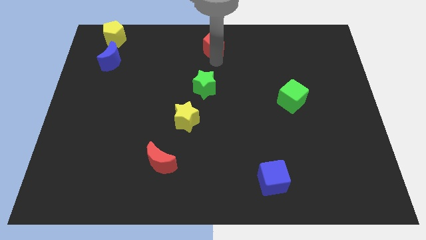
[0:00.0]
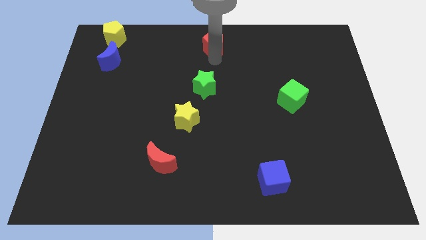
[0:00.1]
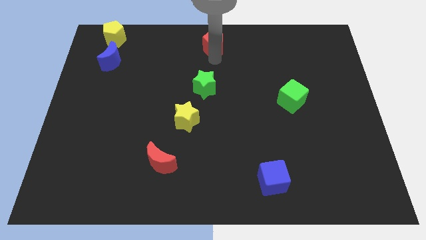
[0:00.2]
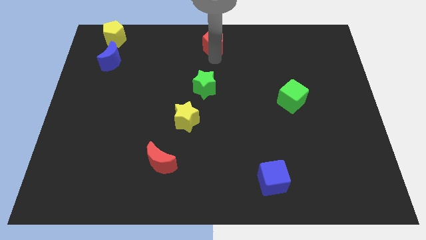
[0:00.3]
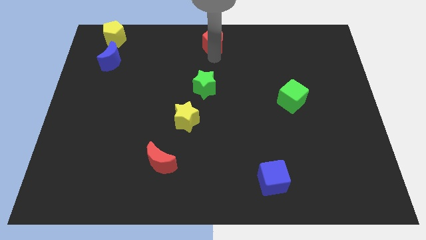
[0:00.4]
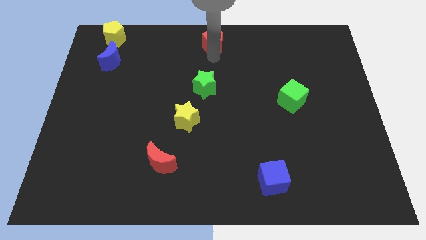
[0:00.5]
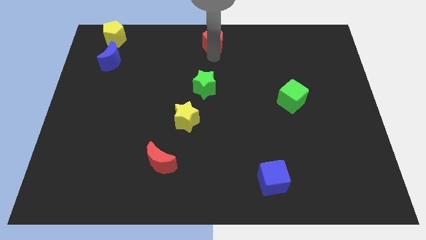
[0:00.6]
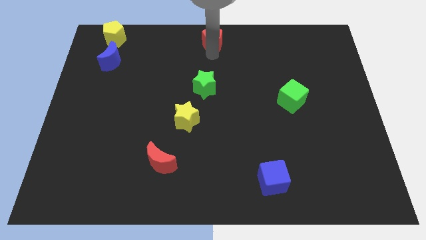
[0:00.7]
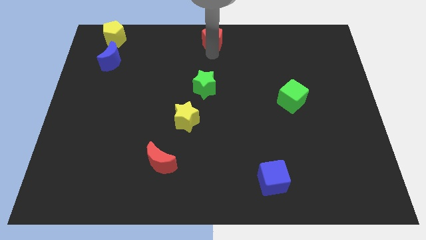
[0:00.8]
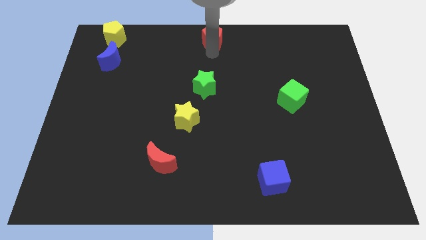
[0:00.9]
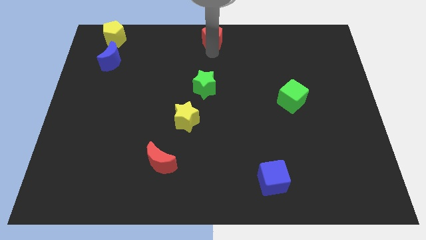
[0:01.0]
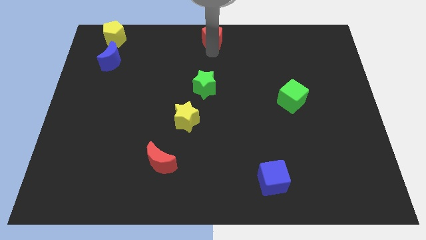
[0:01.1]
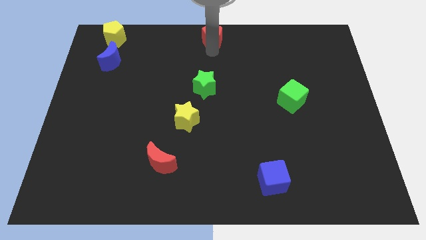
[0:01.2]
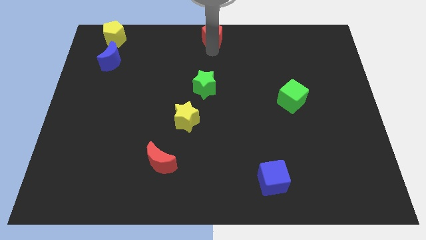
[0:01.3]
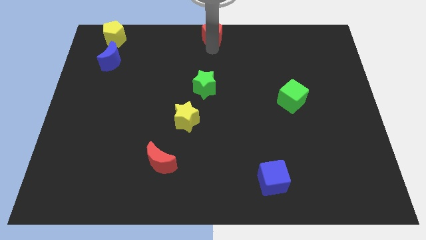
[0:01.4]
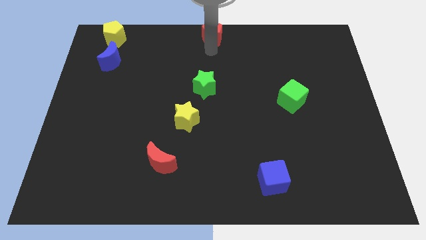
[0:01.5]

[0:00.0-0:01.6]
place the red pentagon to the top center of the board

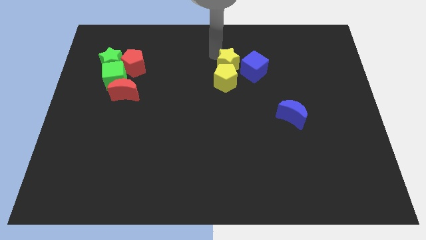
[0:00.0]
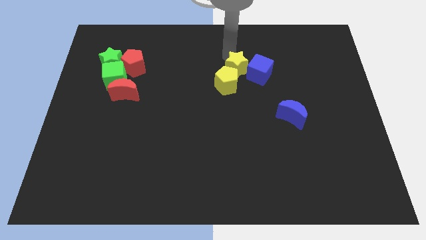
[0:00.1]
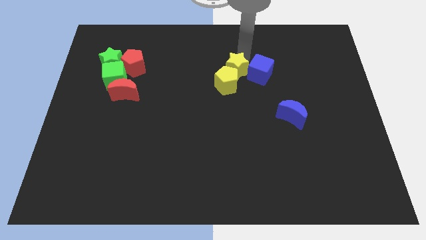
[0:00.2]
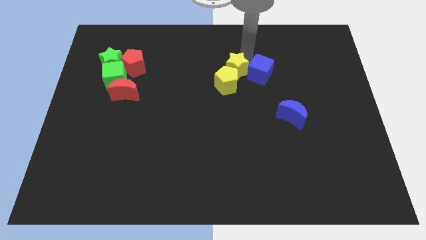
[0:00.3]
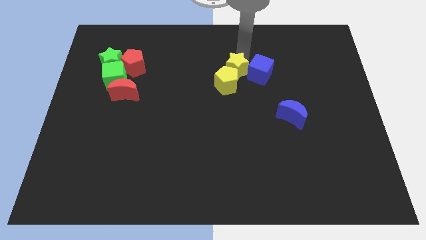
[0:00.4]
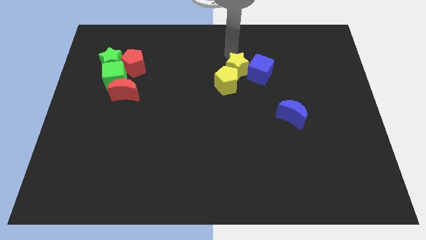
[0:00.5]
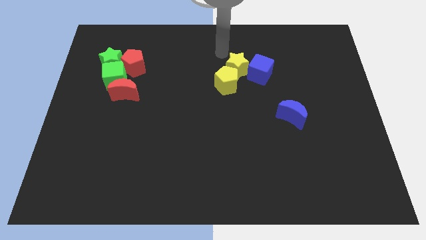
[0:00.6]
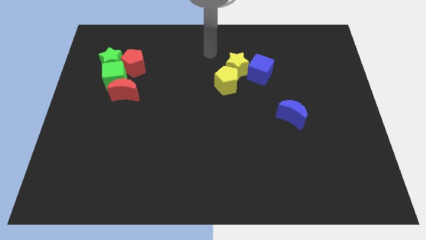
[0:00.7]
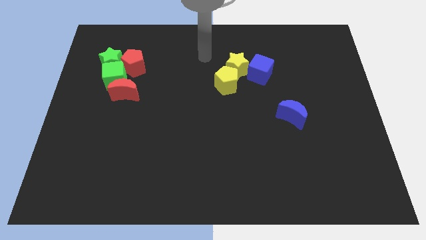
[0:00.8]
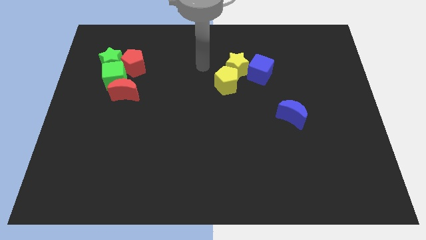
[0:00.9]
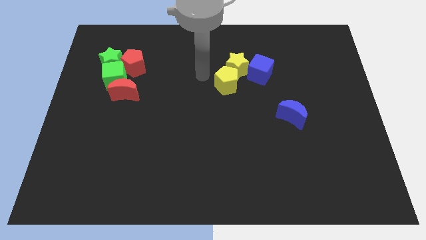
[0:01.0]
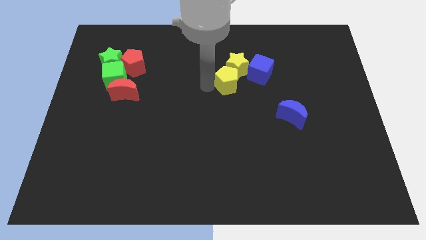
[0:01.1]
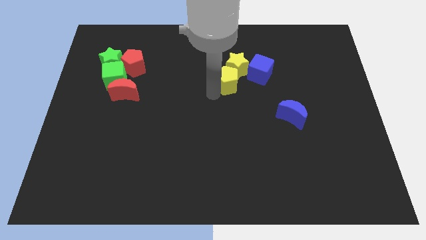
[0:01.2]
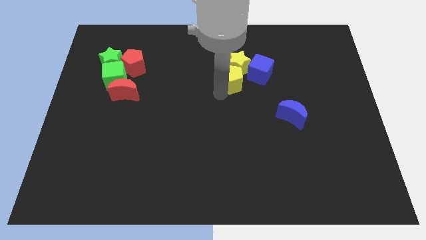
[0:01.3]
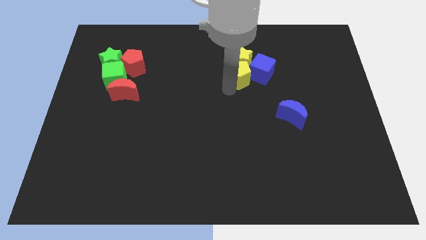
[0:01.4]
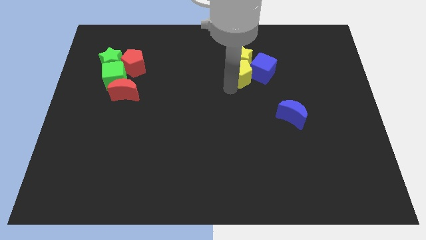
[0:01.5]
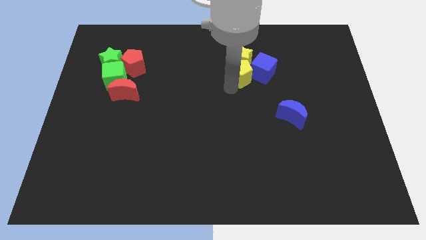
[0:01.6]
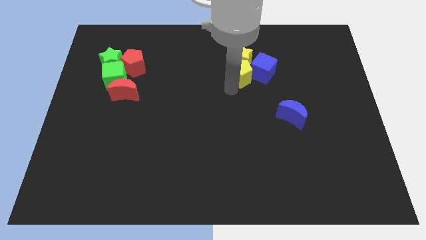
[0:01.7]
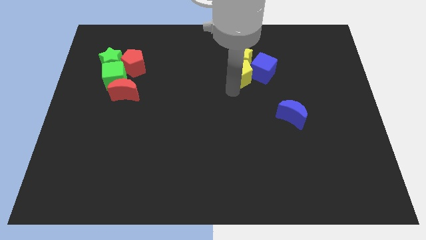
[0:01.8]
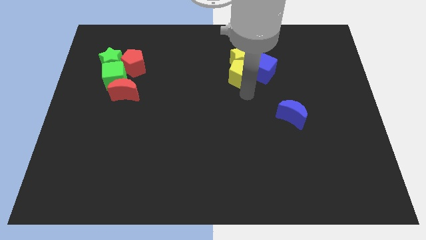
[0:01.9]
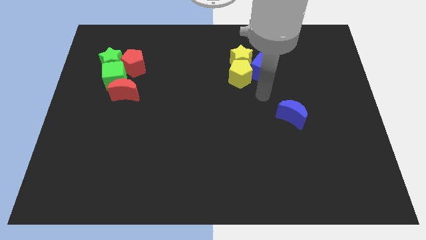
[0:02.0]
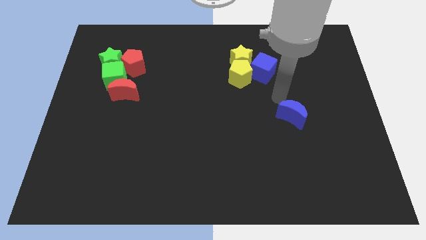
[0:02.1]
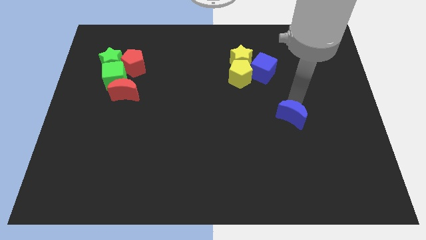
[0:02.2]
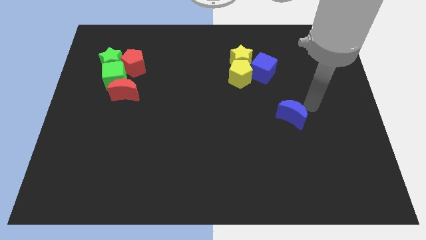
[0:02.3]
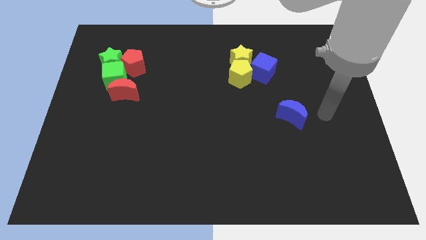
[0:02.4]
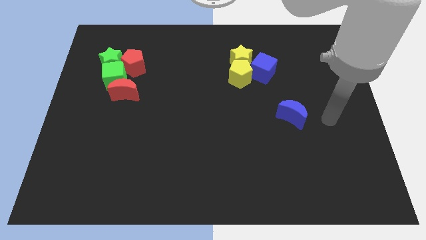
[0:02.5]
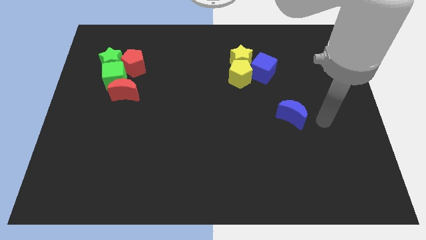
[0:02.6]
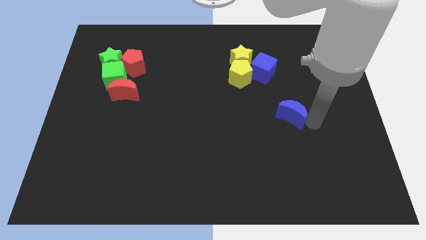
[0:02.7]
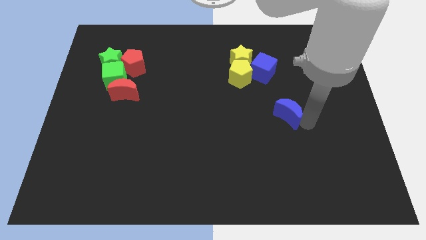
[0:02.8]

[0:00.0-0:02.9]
move your arm towards the right side of the blue crescent

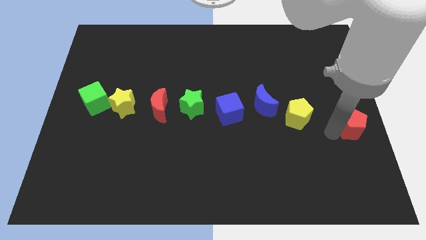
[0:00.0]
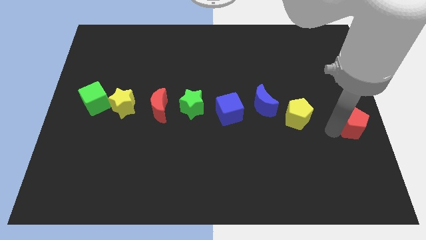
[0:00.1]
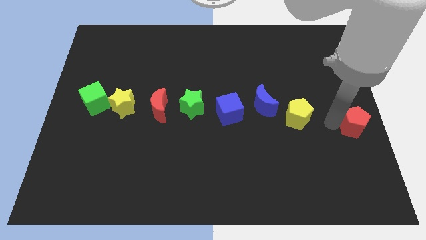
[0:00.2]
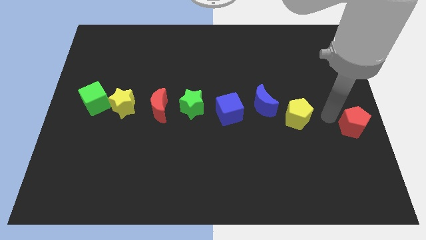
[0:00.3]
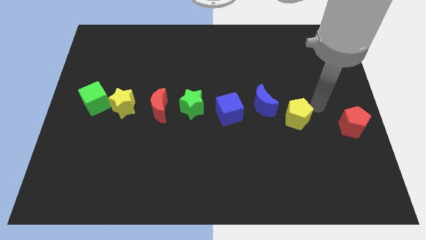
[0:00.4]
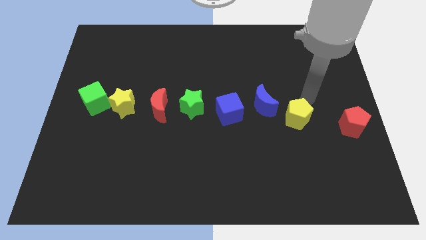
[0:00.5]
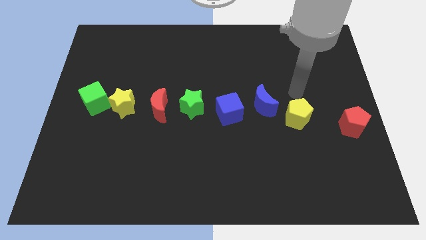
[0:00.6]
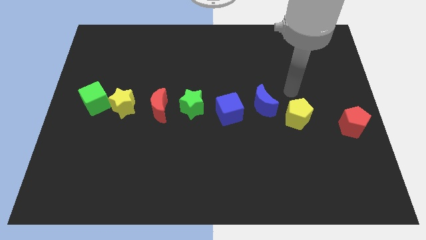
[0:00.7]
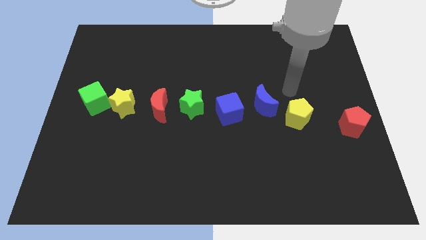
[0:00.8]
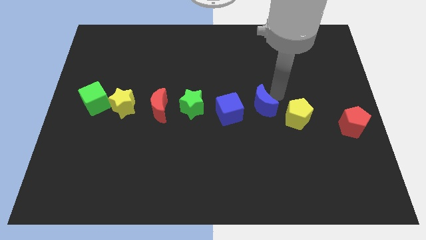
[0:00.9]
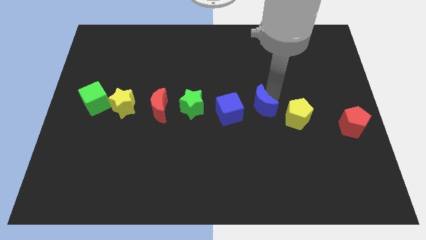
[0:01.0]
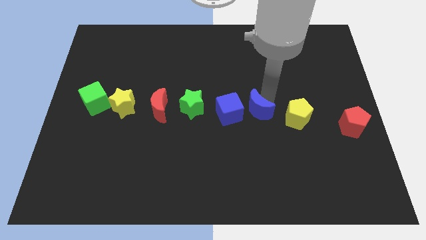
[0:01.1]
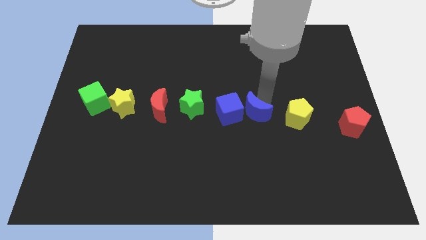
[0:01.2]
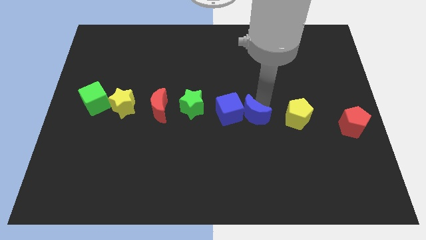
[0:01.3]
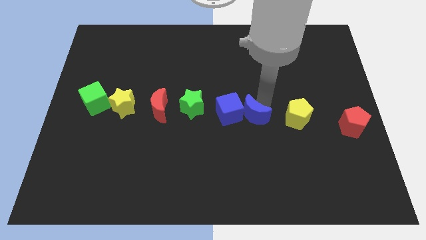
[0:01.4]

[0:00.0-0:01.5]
push the blue crescent into the blue cube

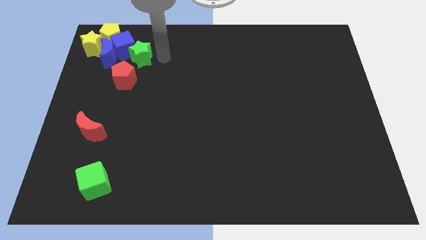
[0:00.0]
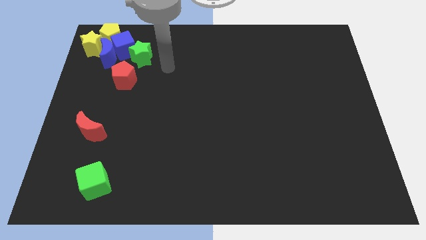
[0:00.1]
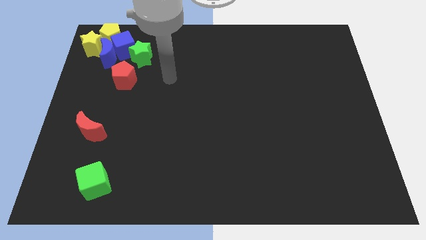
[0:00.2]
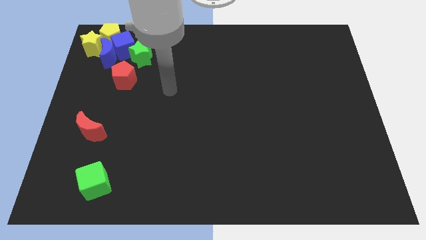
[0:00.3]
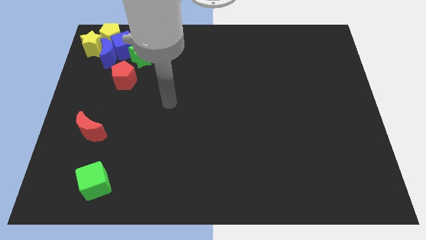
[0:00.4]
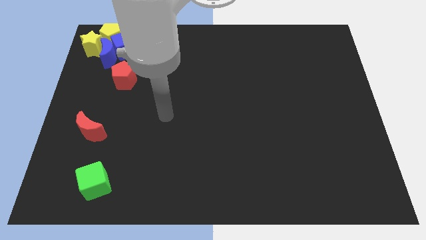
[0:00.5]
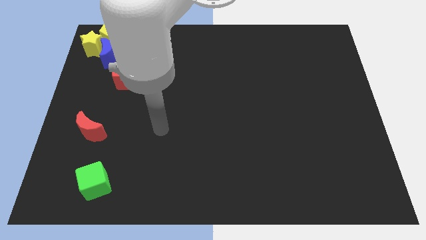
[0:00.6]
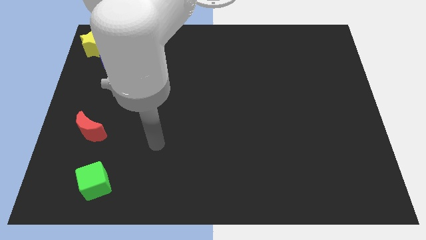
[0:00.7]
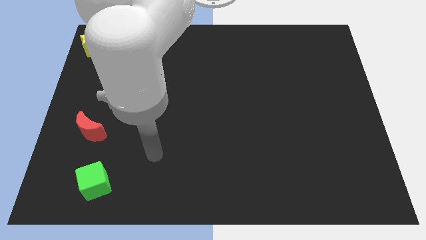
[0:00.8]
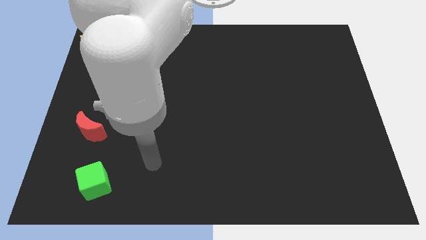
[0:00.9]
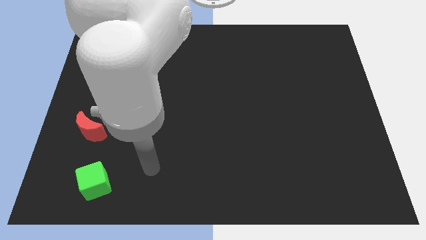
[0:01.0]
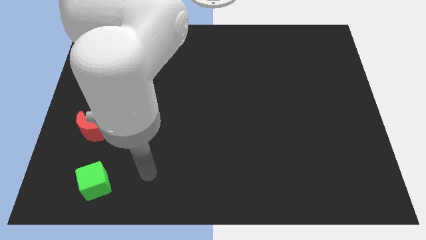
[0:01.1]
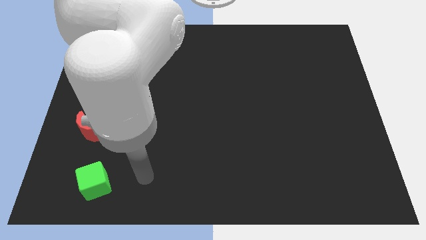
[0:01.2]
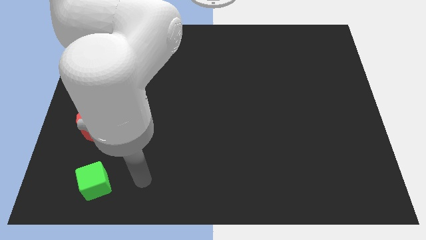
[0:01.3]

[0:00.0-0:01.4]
move your arm to the bottom of the board

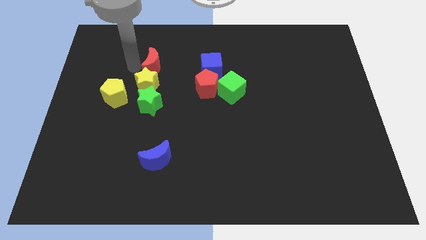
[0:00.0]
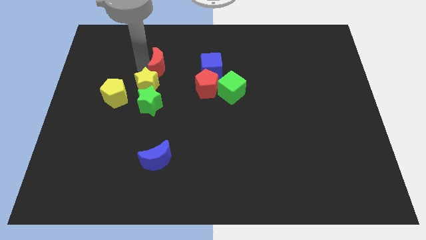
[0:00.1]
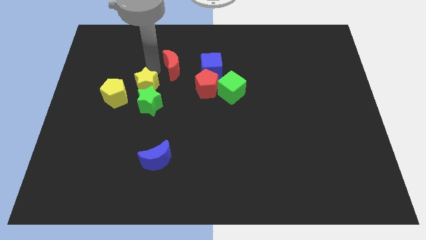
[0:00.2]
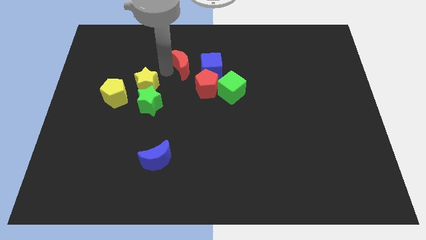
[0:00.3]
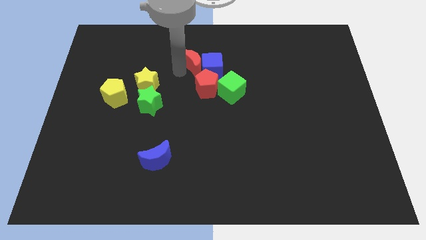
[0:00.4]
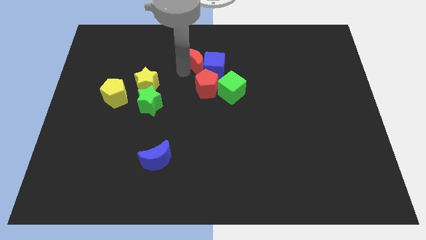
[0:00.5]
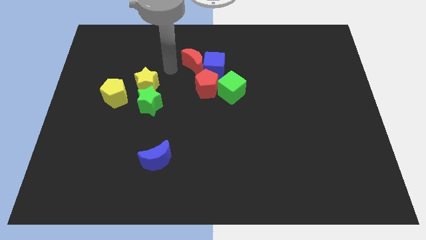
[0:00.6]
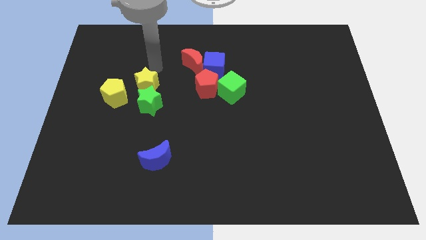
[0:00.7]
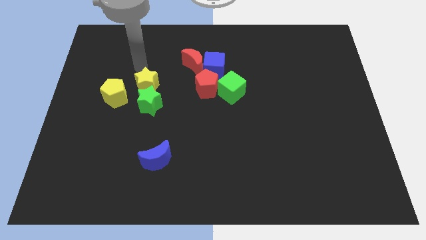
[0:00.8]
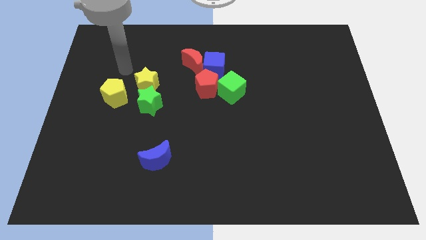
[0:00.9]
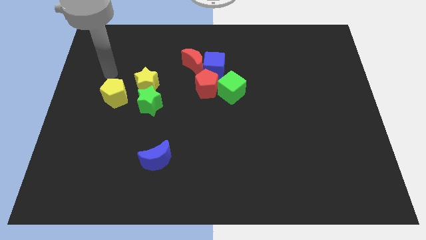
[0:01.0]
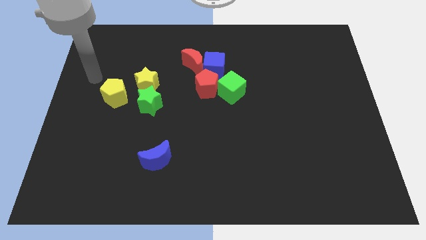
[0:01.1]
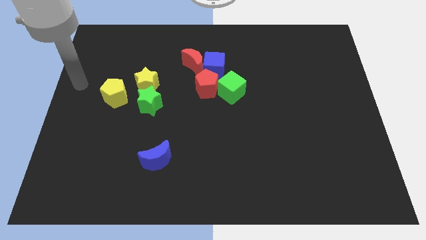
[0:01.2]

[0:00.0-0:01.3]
push the red crescent into the left of blue cube
